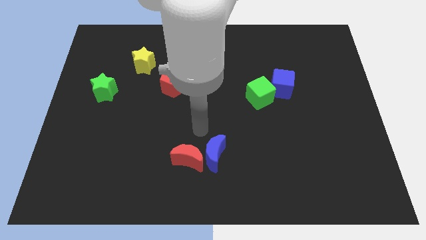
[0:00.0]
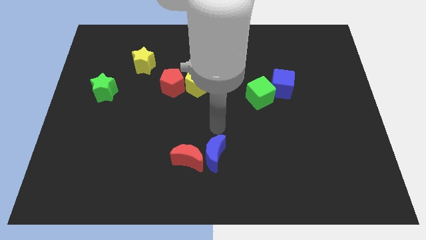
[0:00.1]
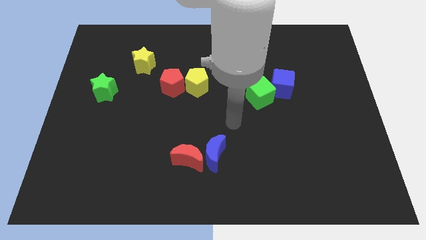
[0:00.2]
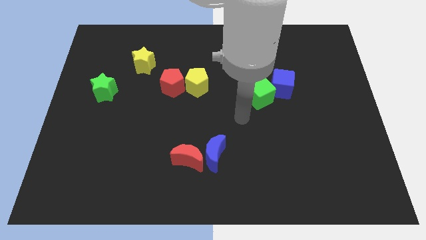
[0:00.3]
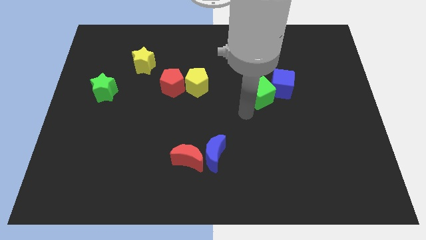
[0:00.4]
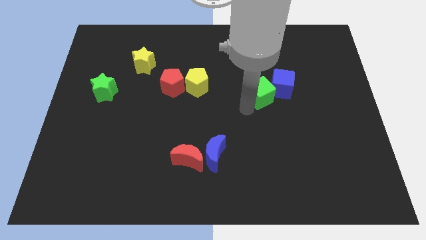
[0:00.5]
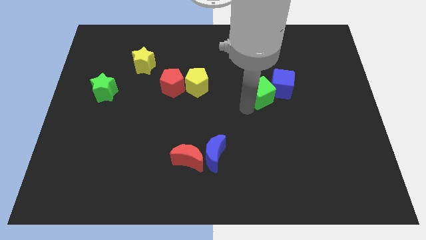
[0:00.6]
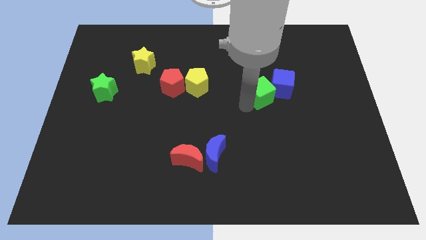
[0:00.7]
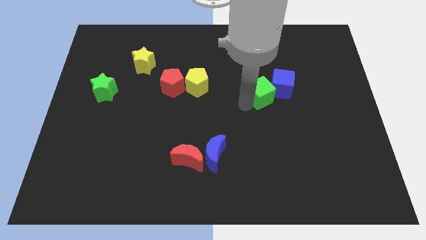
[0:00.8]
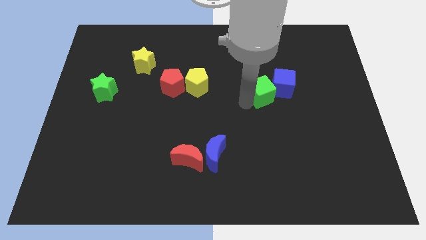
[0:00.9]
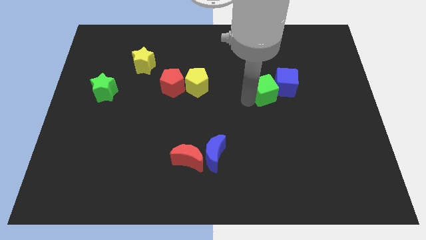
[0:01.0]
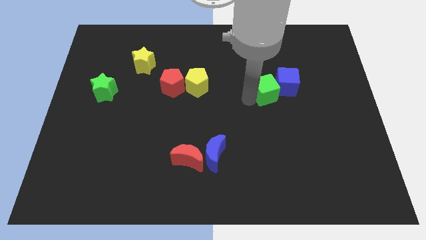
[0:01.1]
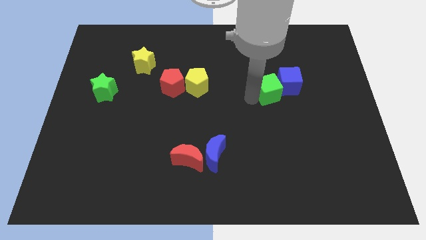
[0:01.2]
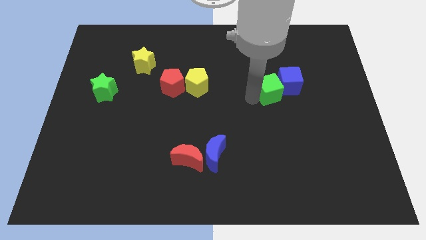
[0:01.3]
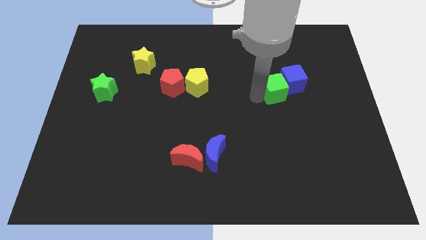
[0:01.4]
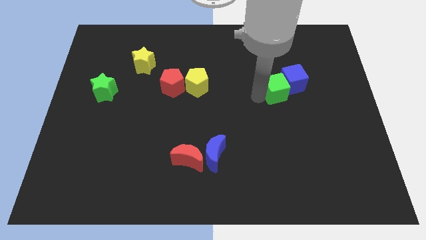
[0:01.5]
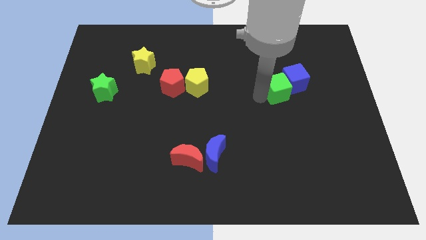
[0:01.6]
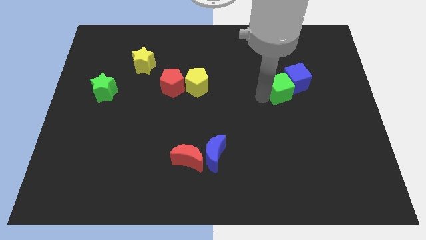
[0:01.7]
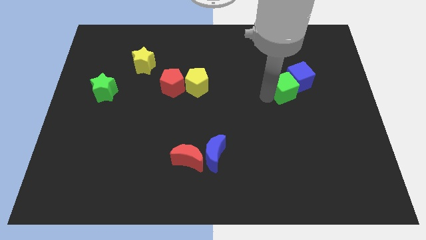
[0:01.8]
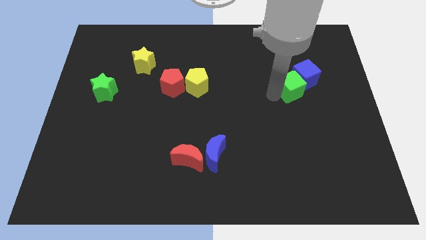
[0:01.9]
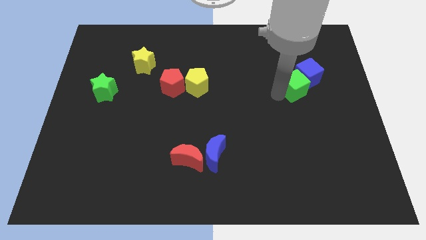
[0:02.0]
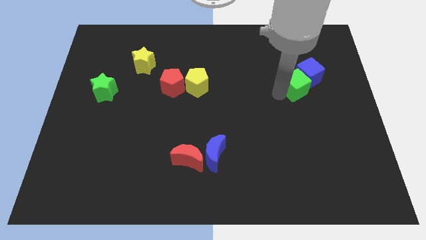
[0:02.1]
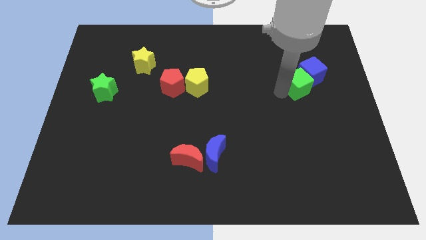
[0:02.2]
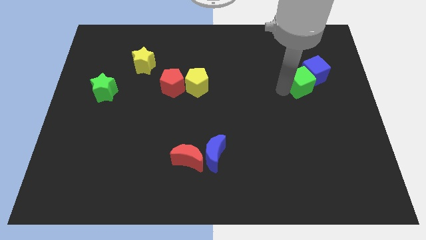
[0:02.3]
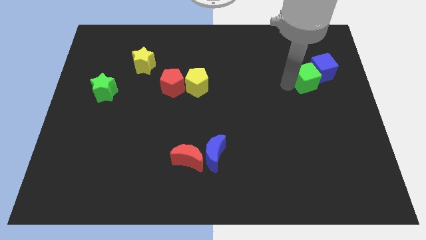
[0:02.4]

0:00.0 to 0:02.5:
push green cube in to blue cube

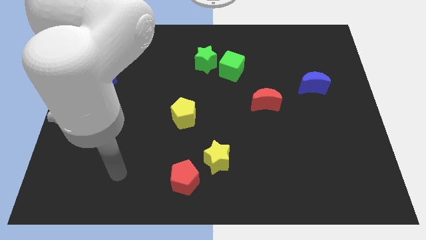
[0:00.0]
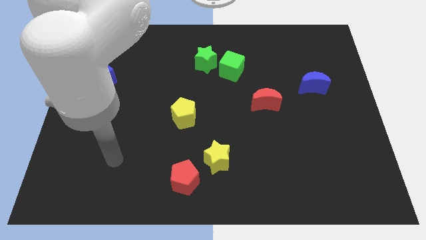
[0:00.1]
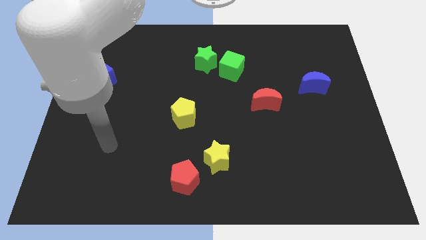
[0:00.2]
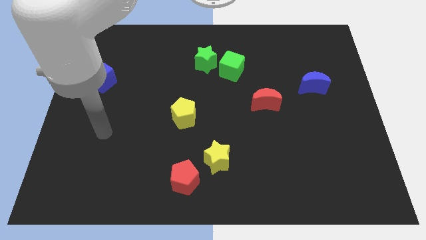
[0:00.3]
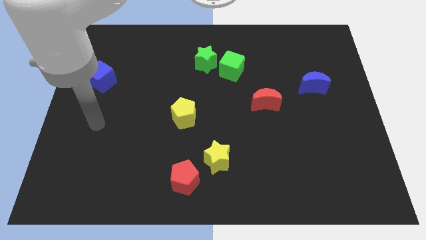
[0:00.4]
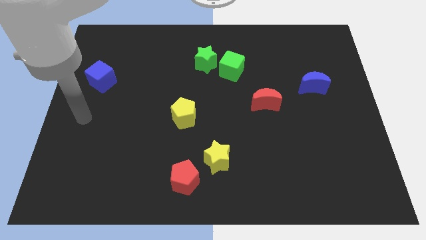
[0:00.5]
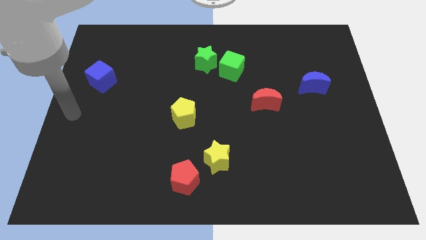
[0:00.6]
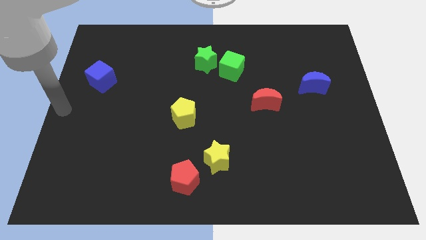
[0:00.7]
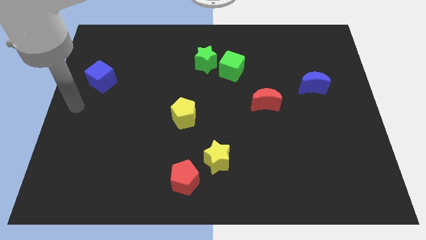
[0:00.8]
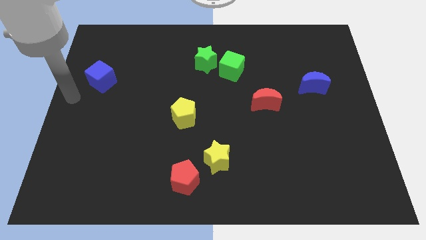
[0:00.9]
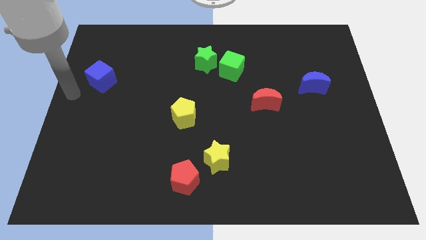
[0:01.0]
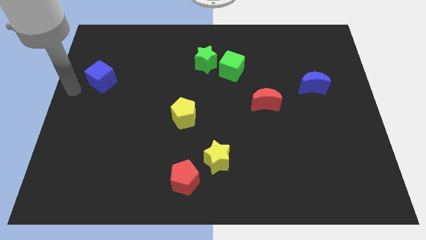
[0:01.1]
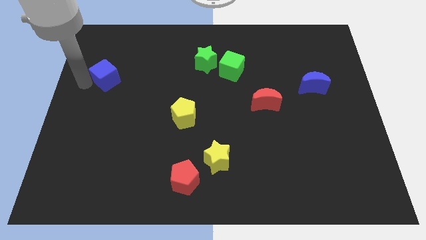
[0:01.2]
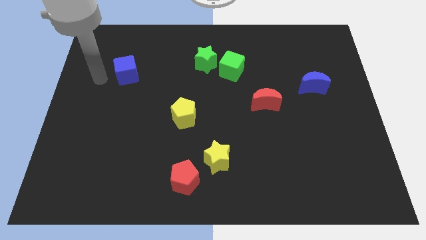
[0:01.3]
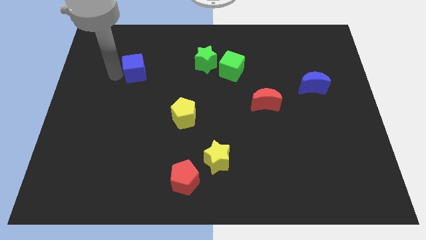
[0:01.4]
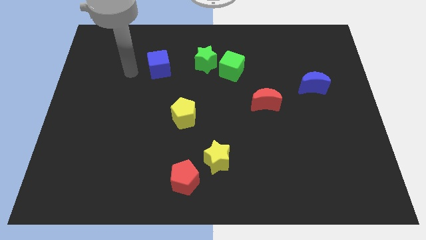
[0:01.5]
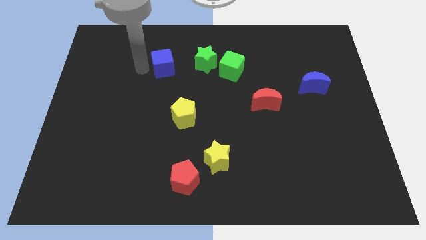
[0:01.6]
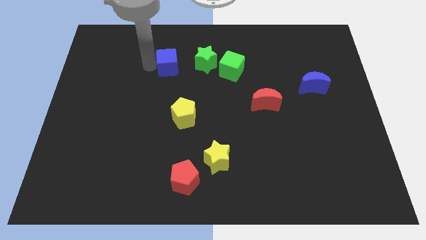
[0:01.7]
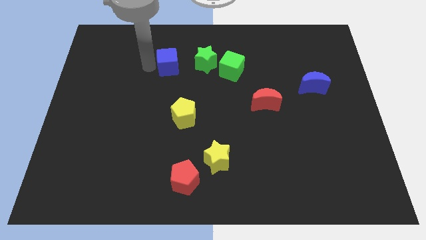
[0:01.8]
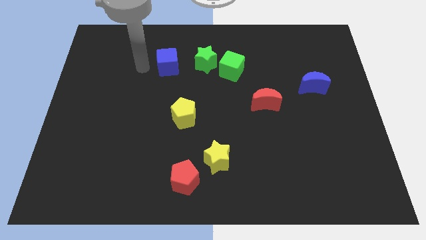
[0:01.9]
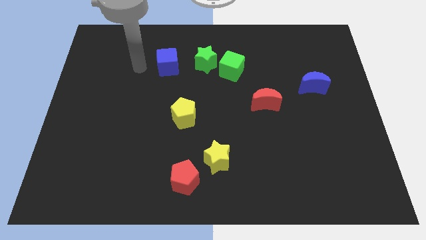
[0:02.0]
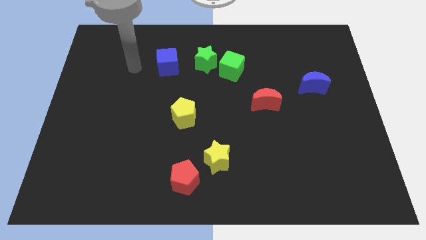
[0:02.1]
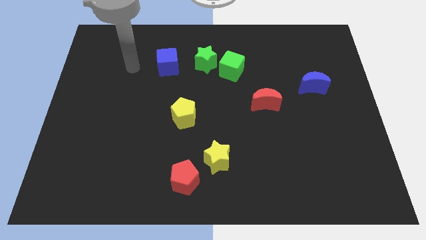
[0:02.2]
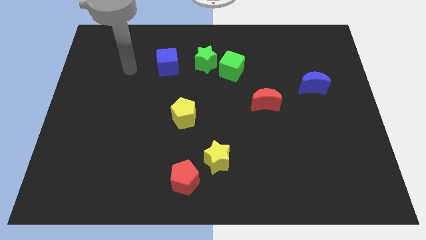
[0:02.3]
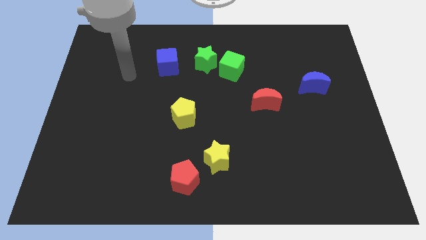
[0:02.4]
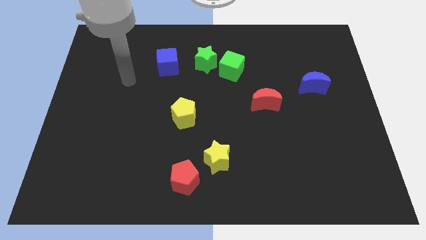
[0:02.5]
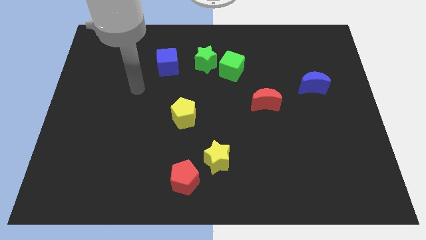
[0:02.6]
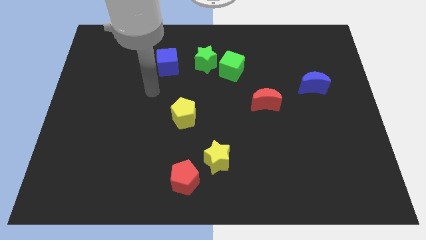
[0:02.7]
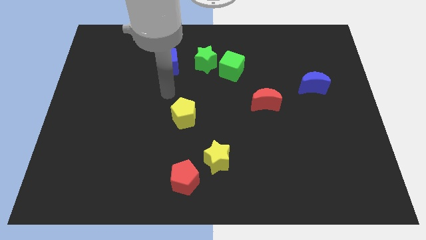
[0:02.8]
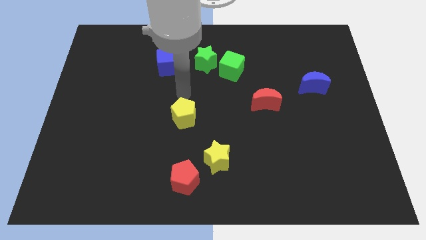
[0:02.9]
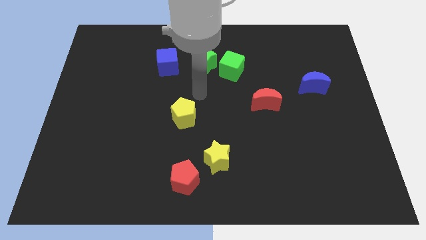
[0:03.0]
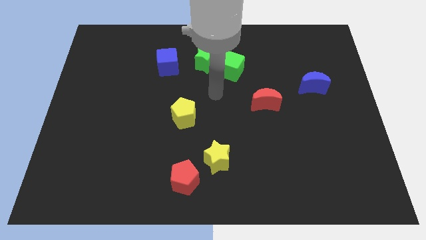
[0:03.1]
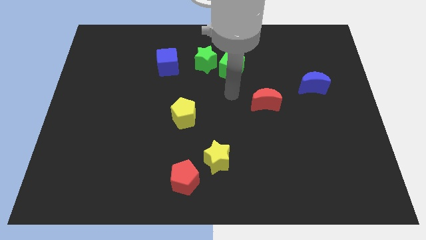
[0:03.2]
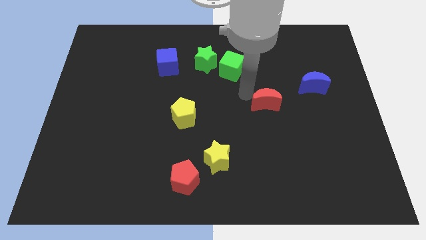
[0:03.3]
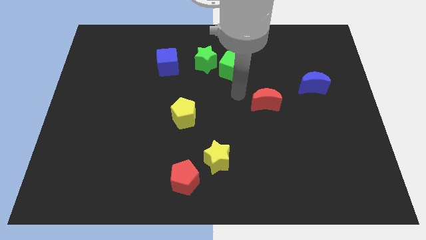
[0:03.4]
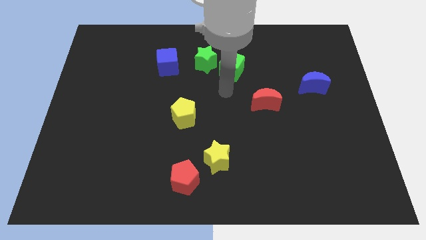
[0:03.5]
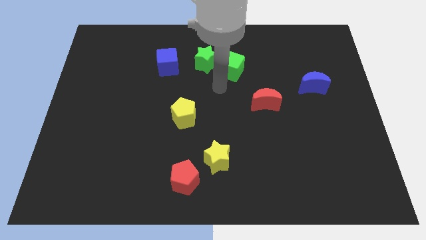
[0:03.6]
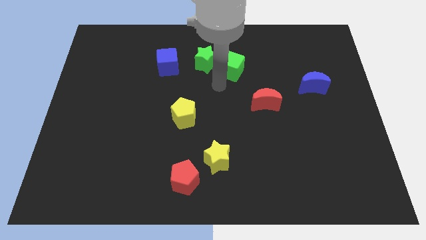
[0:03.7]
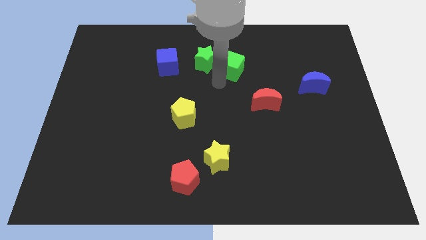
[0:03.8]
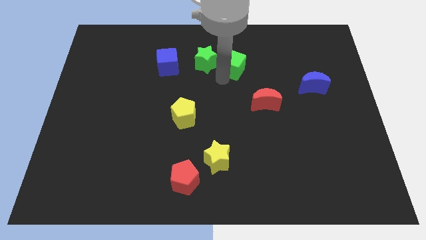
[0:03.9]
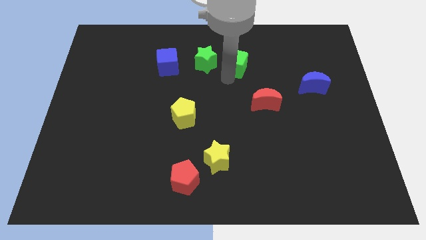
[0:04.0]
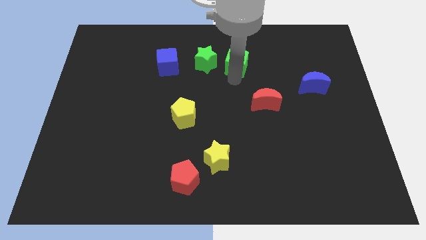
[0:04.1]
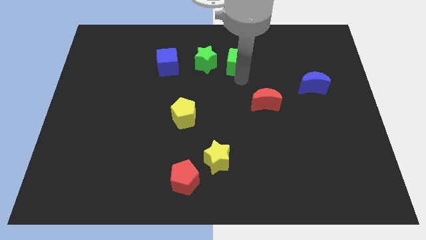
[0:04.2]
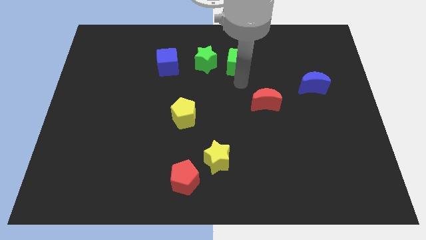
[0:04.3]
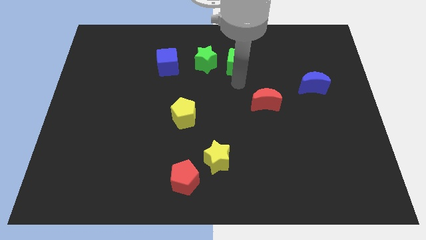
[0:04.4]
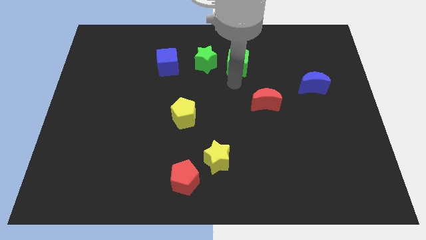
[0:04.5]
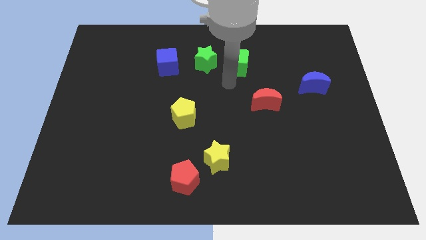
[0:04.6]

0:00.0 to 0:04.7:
push the blue cube to the left of green star

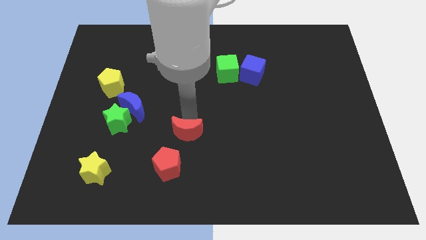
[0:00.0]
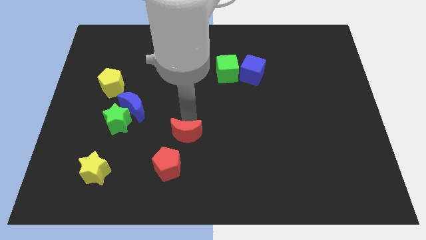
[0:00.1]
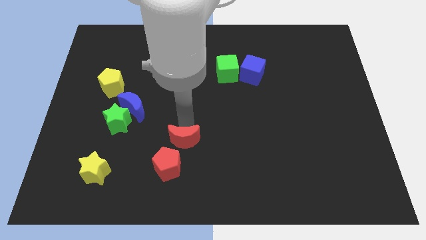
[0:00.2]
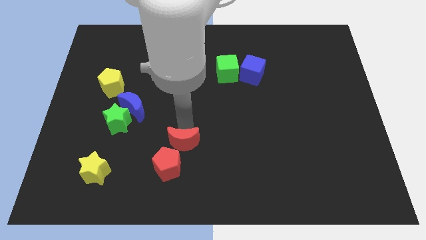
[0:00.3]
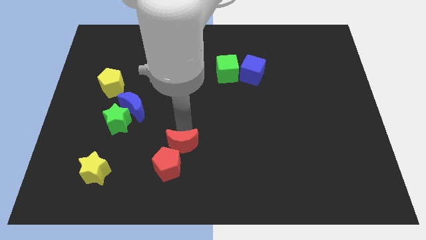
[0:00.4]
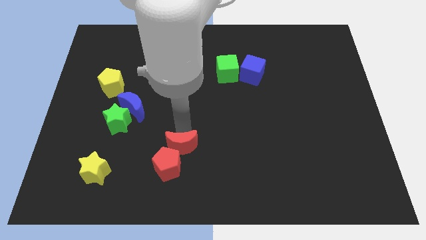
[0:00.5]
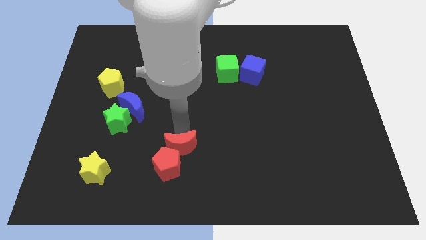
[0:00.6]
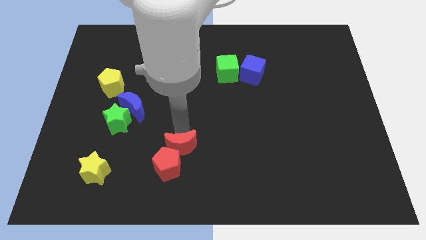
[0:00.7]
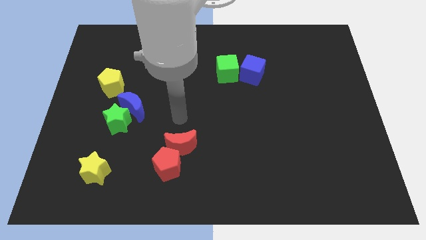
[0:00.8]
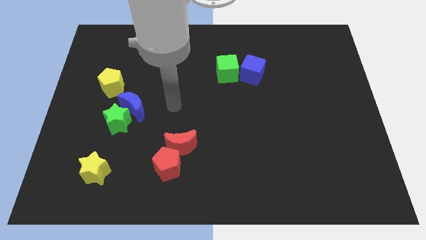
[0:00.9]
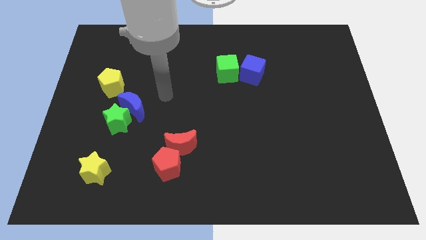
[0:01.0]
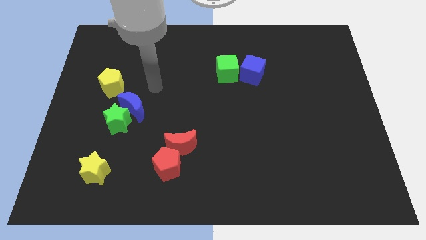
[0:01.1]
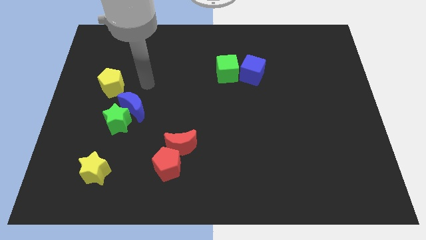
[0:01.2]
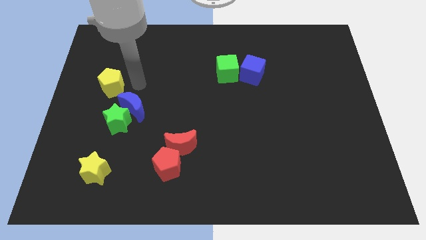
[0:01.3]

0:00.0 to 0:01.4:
push the red crescent into the red pentagon

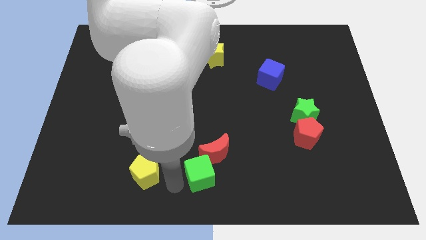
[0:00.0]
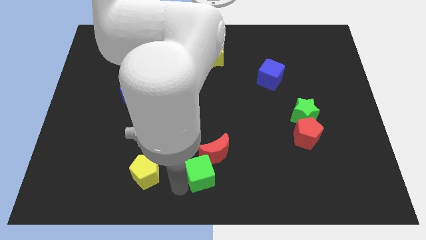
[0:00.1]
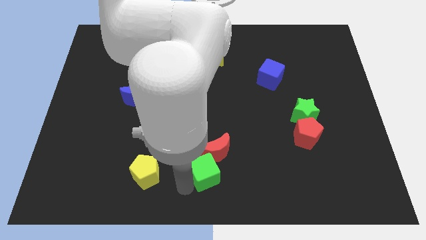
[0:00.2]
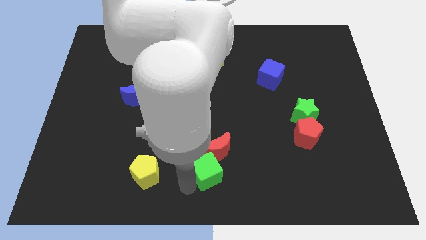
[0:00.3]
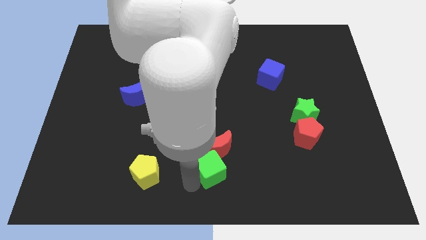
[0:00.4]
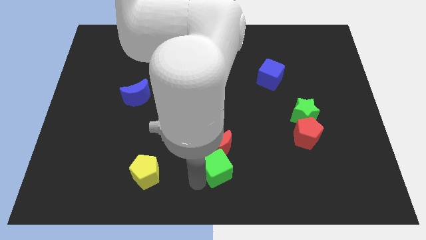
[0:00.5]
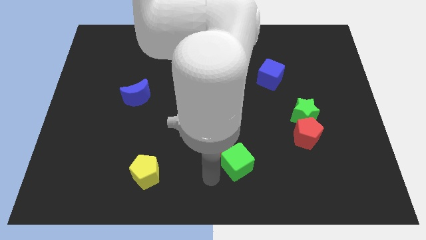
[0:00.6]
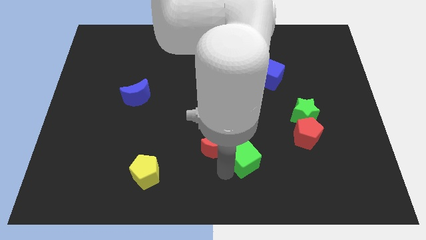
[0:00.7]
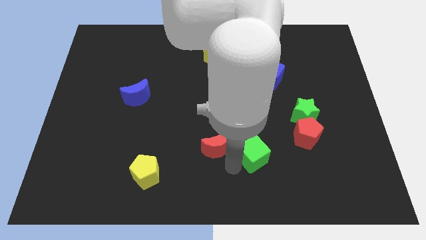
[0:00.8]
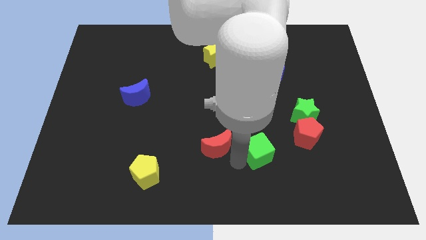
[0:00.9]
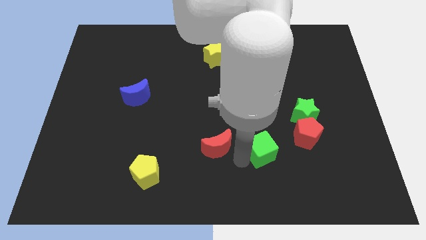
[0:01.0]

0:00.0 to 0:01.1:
separate green cube from red moon
